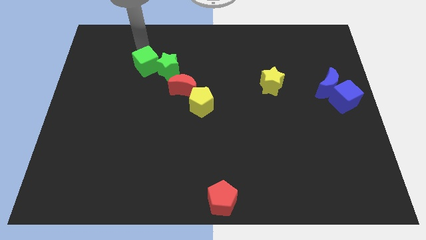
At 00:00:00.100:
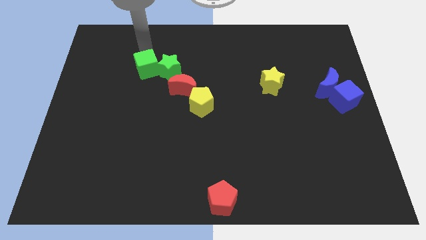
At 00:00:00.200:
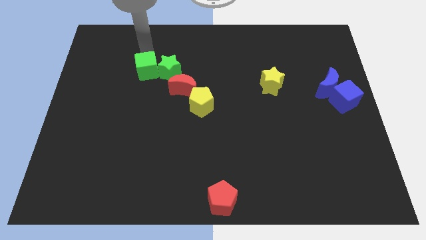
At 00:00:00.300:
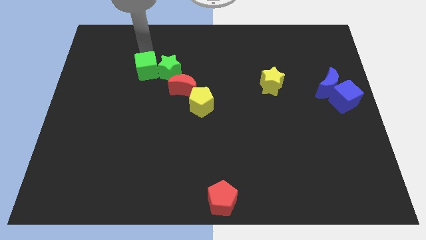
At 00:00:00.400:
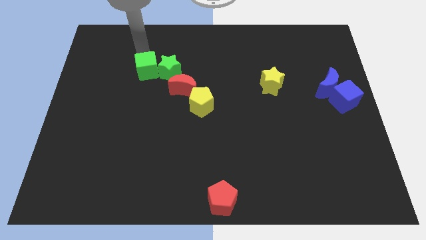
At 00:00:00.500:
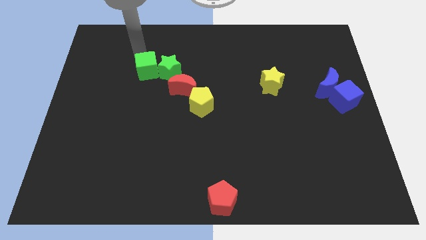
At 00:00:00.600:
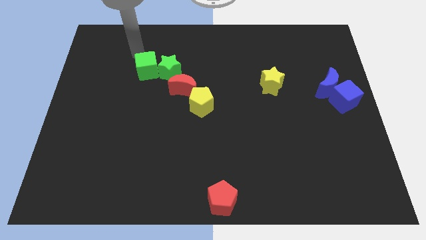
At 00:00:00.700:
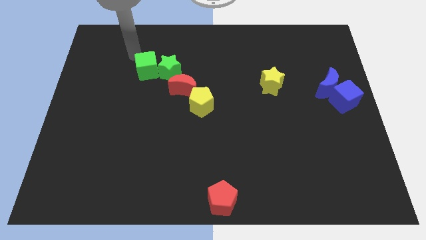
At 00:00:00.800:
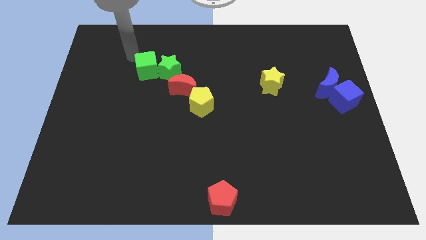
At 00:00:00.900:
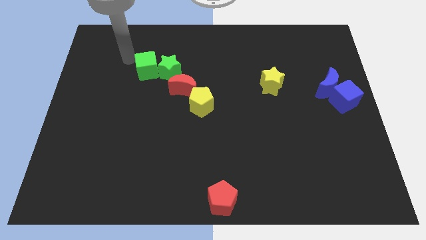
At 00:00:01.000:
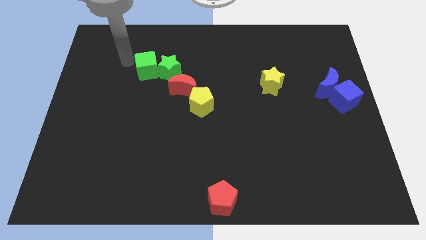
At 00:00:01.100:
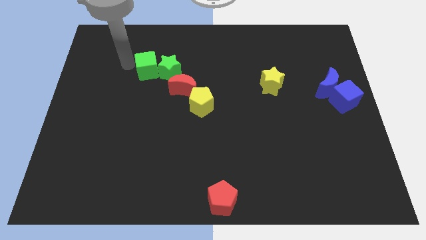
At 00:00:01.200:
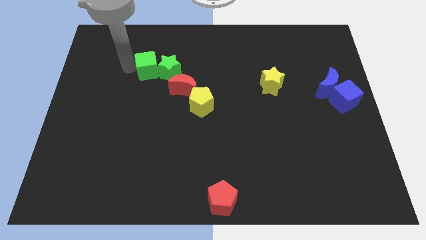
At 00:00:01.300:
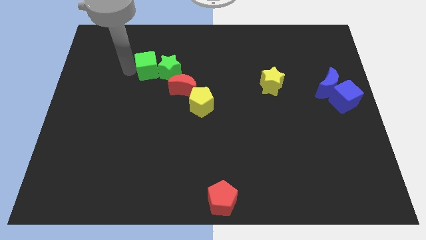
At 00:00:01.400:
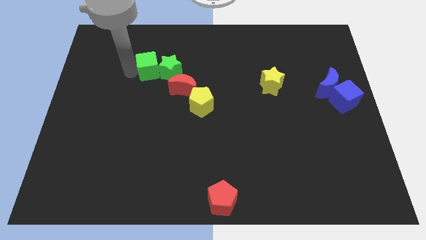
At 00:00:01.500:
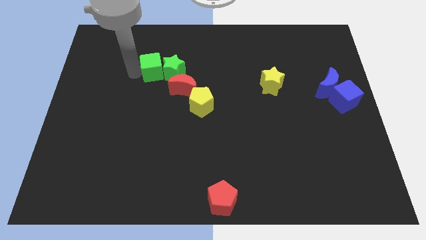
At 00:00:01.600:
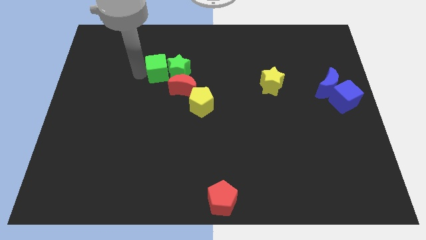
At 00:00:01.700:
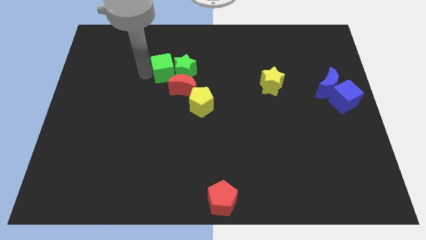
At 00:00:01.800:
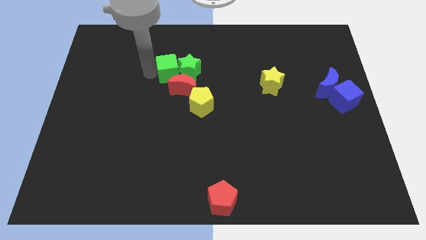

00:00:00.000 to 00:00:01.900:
push the green cube into the green star

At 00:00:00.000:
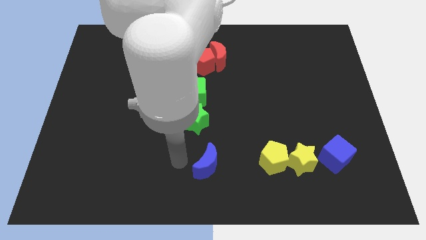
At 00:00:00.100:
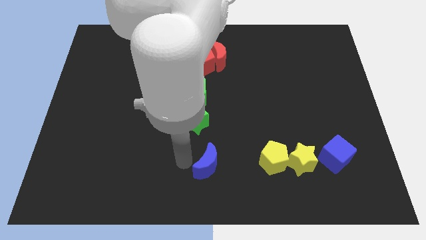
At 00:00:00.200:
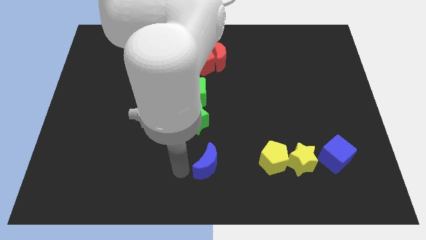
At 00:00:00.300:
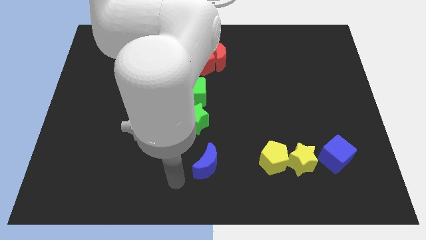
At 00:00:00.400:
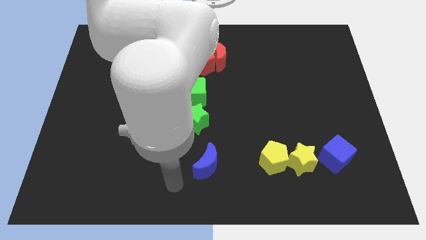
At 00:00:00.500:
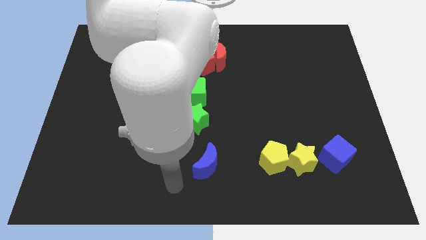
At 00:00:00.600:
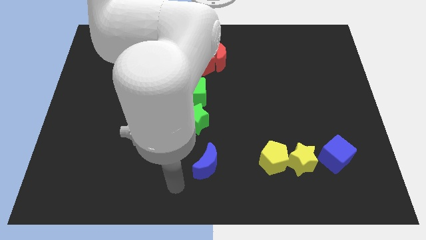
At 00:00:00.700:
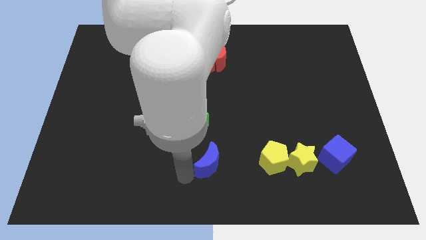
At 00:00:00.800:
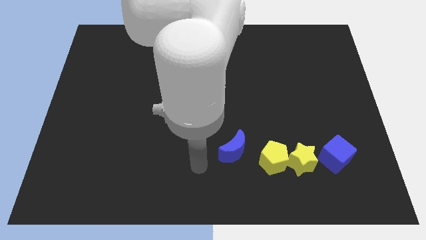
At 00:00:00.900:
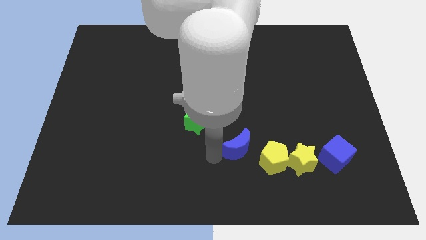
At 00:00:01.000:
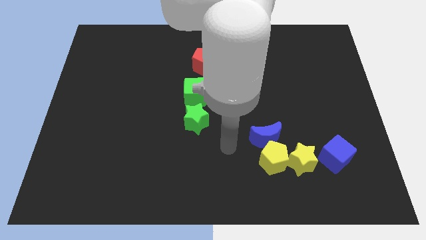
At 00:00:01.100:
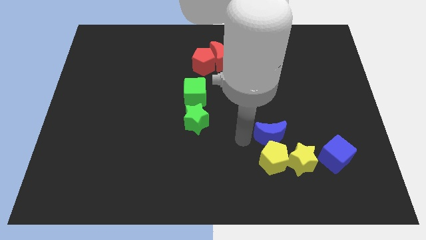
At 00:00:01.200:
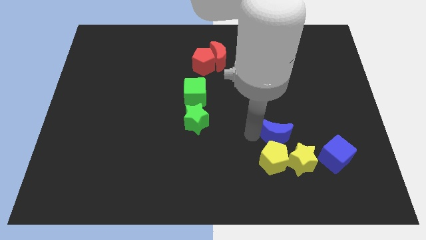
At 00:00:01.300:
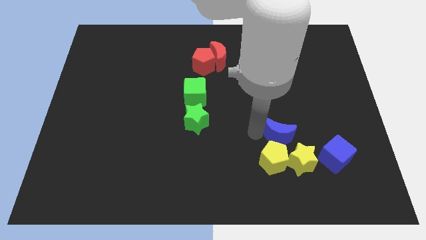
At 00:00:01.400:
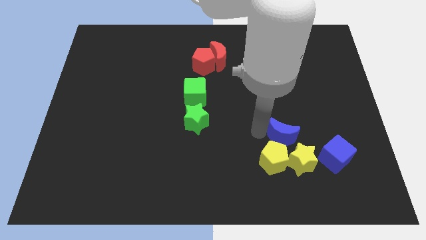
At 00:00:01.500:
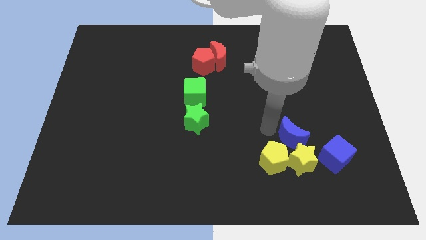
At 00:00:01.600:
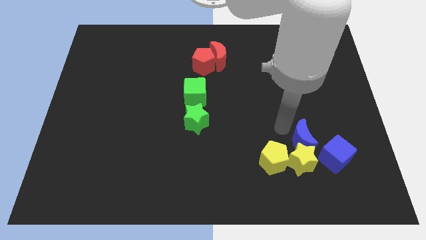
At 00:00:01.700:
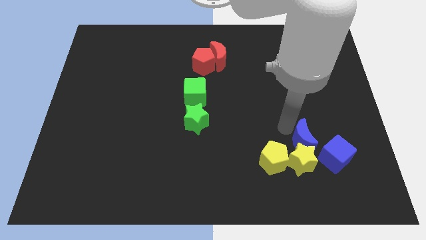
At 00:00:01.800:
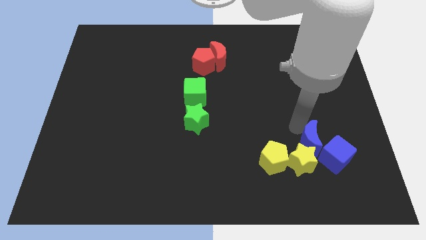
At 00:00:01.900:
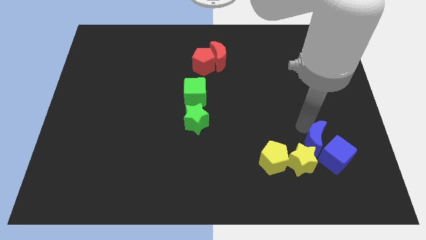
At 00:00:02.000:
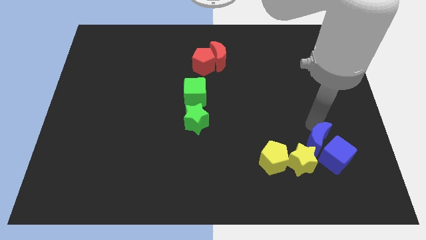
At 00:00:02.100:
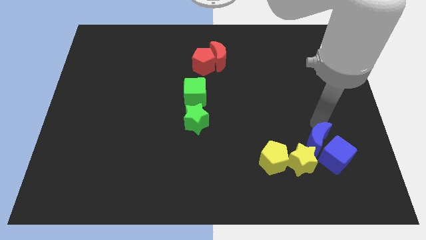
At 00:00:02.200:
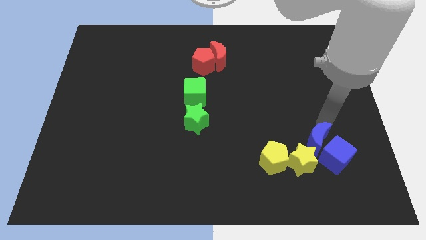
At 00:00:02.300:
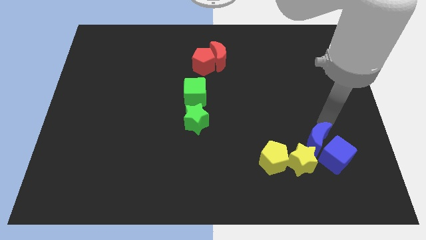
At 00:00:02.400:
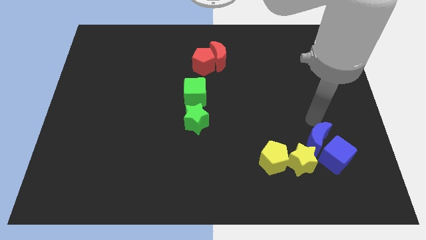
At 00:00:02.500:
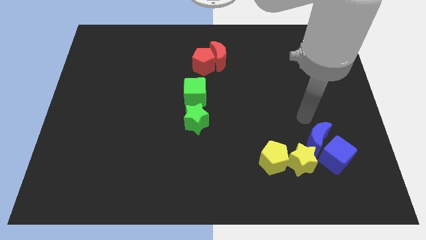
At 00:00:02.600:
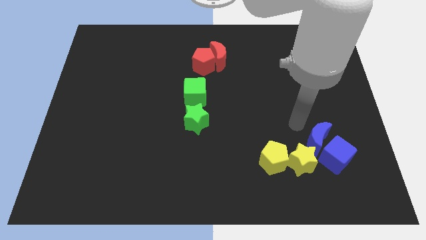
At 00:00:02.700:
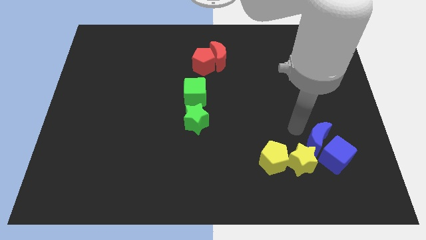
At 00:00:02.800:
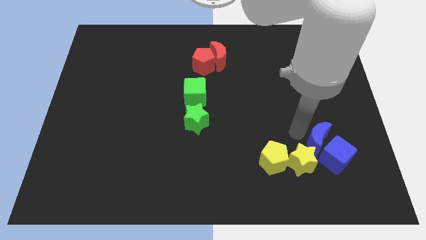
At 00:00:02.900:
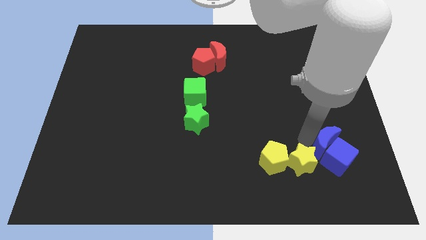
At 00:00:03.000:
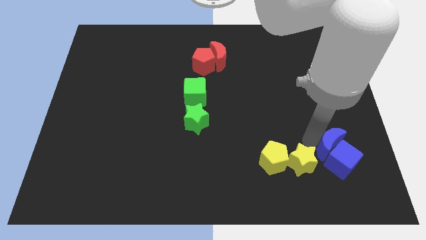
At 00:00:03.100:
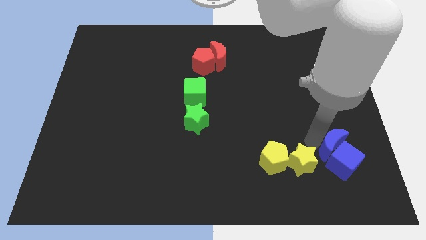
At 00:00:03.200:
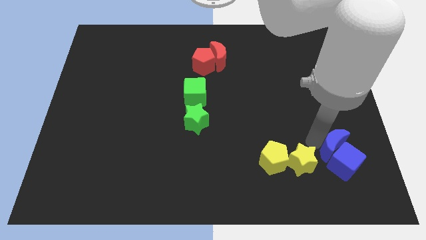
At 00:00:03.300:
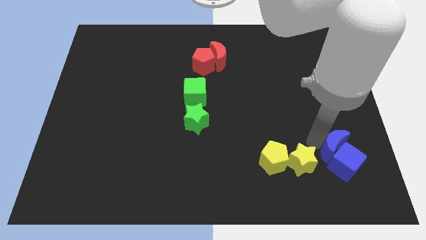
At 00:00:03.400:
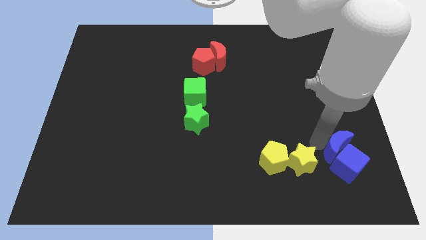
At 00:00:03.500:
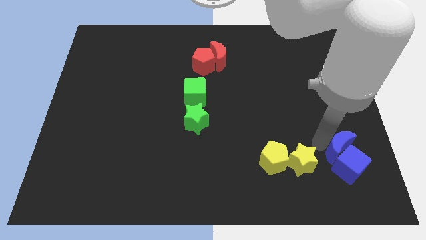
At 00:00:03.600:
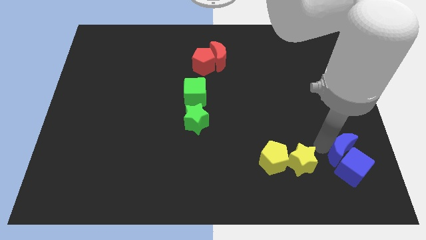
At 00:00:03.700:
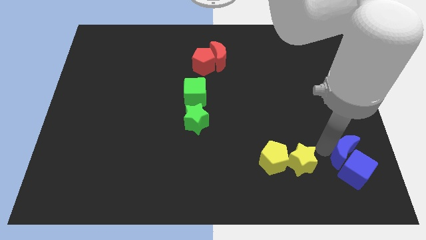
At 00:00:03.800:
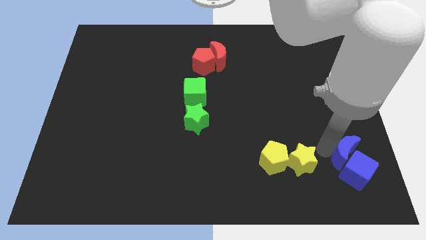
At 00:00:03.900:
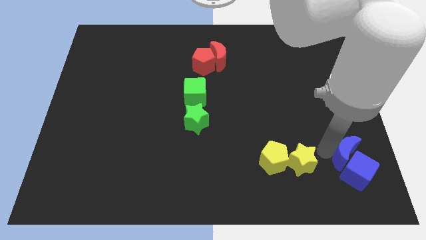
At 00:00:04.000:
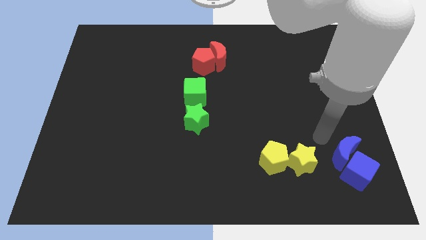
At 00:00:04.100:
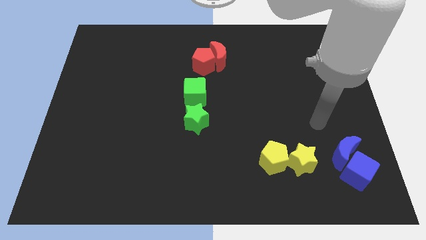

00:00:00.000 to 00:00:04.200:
add blue moon into blue cube

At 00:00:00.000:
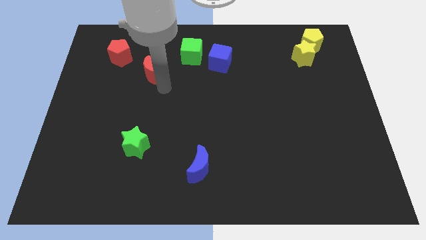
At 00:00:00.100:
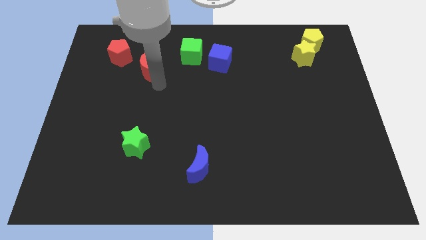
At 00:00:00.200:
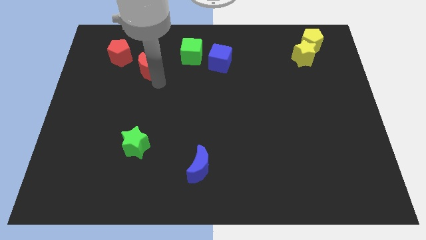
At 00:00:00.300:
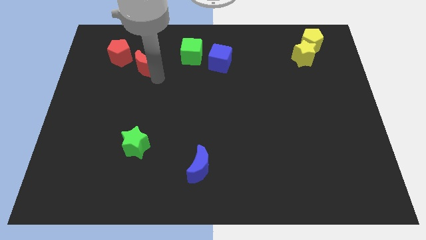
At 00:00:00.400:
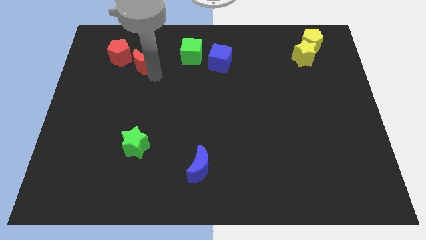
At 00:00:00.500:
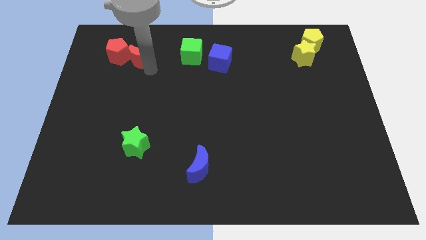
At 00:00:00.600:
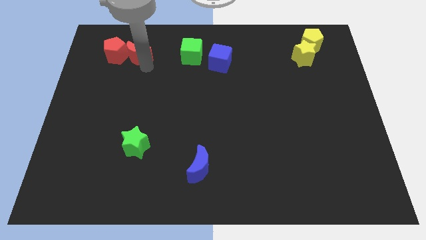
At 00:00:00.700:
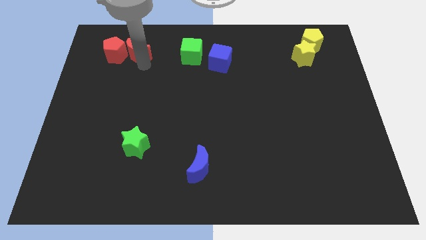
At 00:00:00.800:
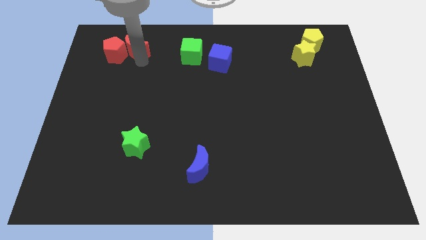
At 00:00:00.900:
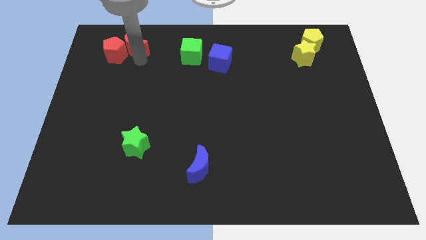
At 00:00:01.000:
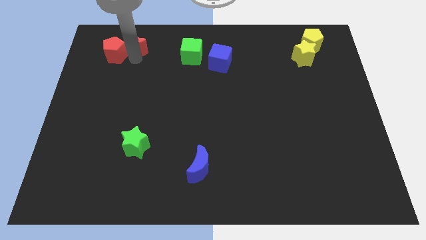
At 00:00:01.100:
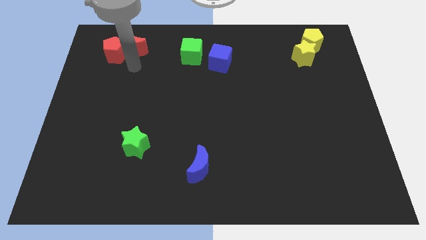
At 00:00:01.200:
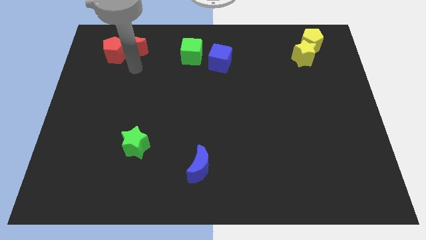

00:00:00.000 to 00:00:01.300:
push red moon in to red pentagon

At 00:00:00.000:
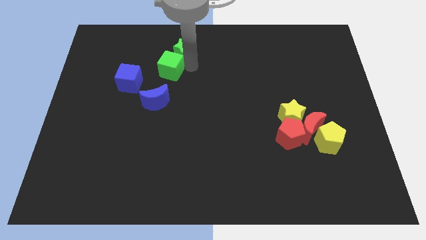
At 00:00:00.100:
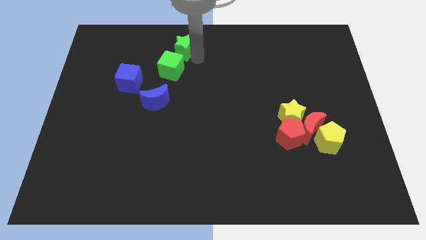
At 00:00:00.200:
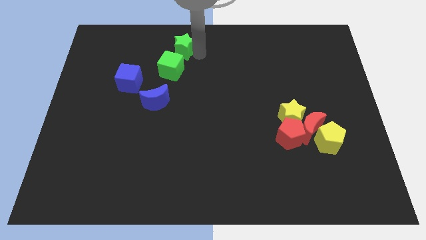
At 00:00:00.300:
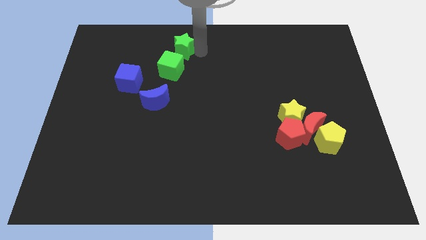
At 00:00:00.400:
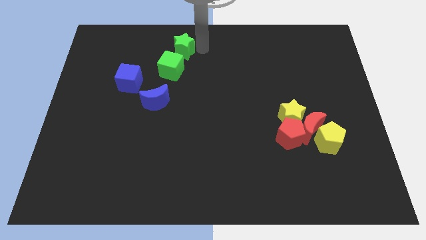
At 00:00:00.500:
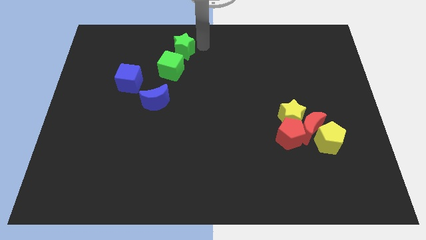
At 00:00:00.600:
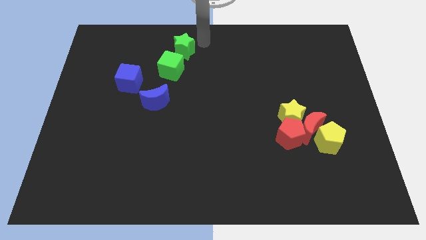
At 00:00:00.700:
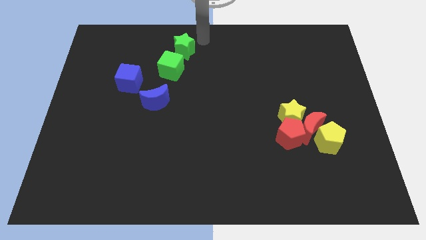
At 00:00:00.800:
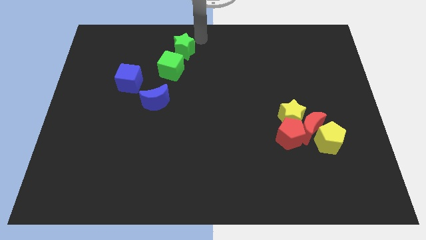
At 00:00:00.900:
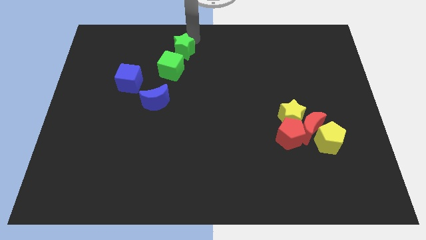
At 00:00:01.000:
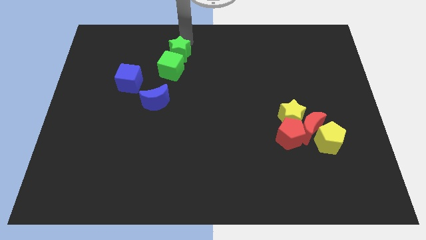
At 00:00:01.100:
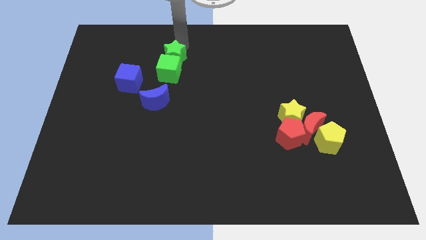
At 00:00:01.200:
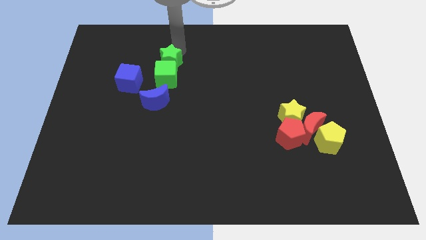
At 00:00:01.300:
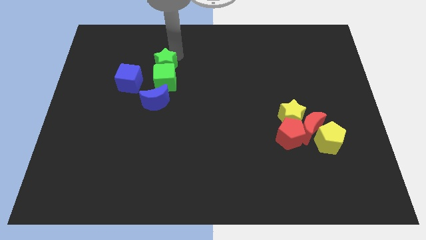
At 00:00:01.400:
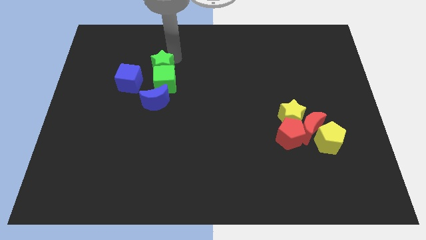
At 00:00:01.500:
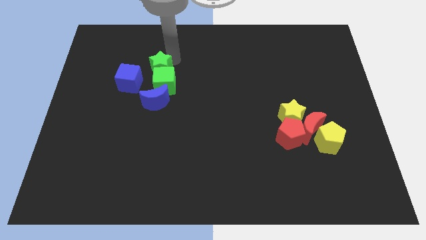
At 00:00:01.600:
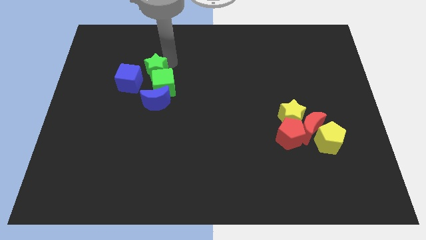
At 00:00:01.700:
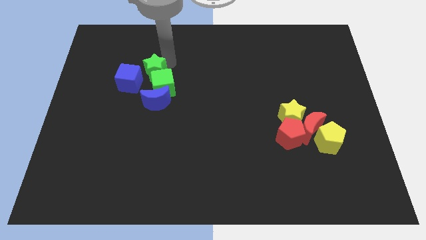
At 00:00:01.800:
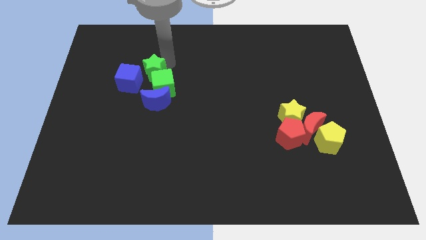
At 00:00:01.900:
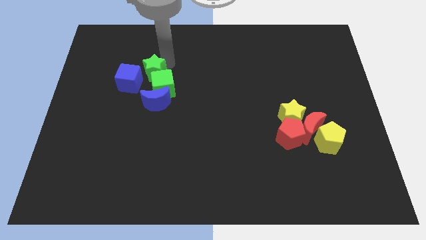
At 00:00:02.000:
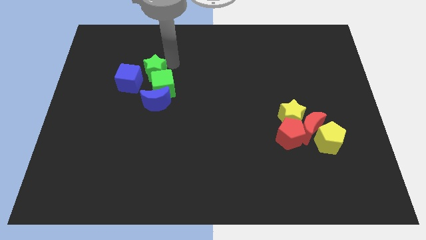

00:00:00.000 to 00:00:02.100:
push the green star into the green cube
